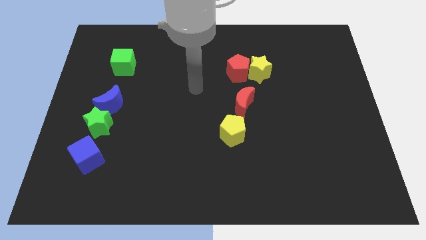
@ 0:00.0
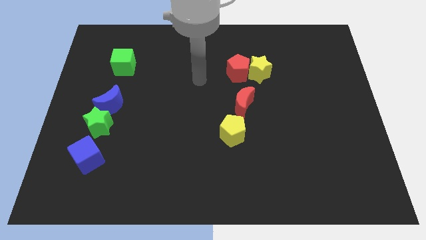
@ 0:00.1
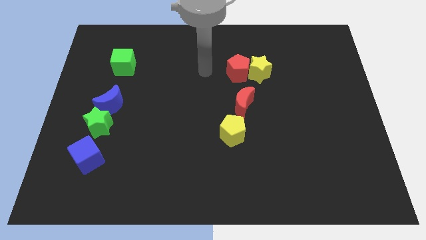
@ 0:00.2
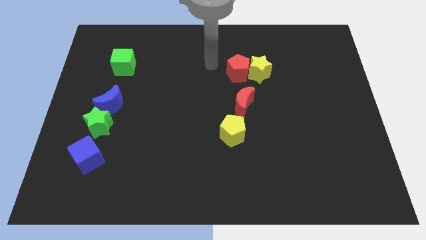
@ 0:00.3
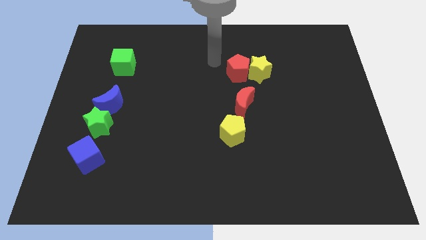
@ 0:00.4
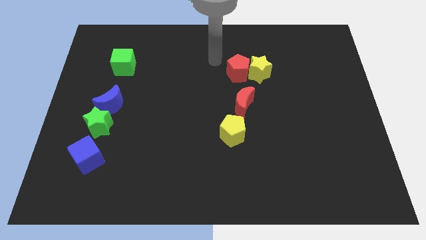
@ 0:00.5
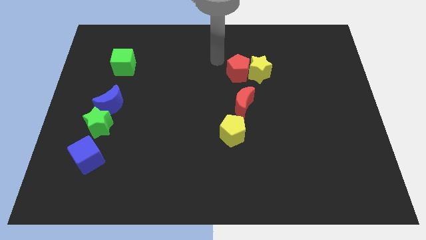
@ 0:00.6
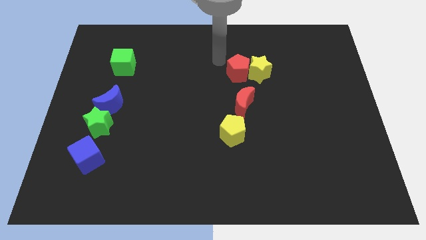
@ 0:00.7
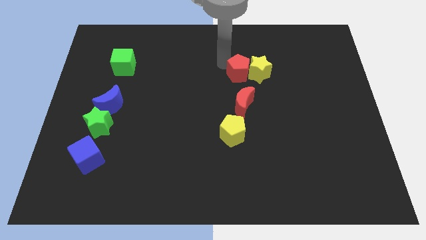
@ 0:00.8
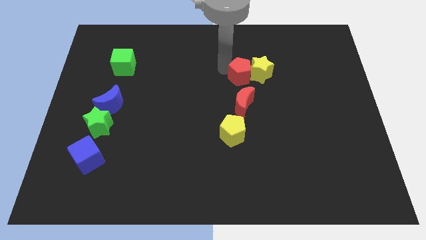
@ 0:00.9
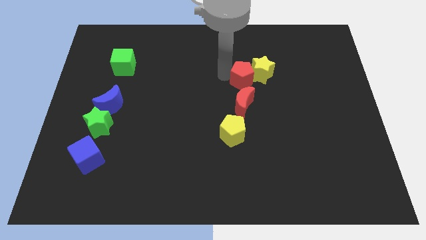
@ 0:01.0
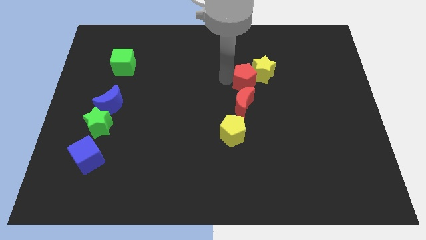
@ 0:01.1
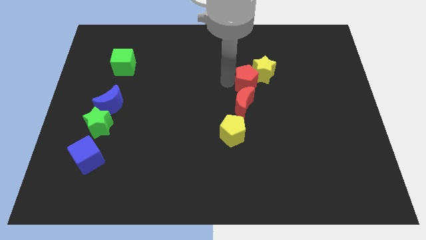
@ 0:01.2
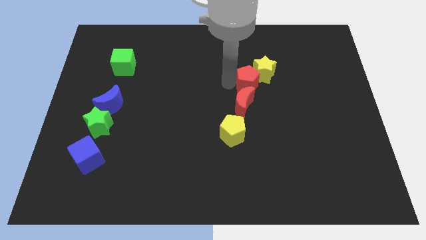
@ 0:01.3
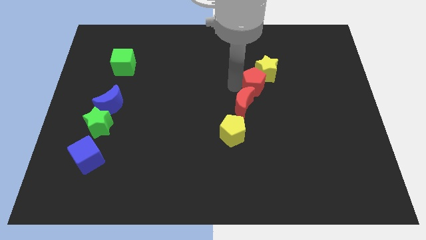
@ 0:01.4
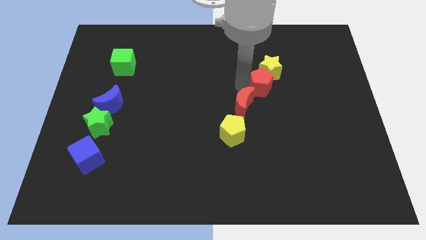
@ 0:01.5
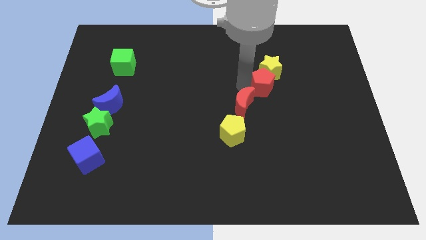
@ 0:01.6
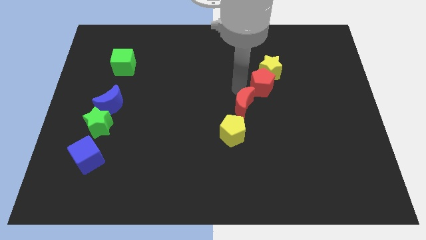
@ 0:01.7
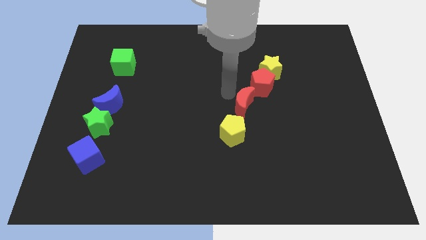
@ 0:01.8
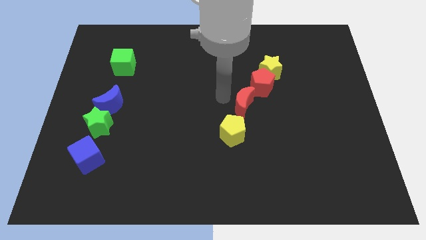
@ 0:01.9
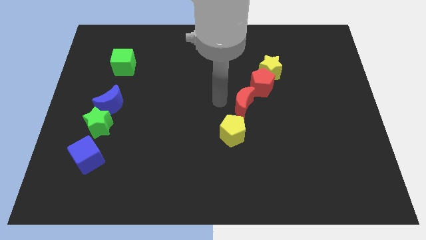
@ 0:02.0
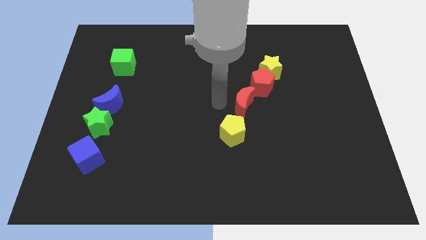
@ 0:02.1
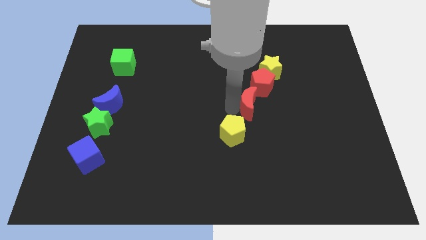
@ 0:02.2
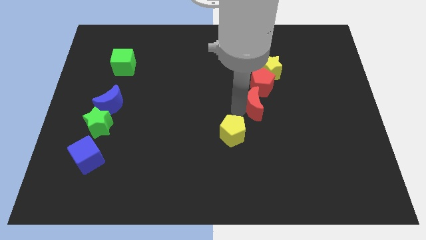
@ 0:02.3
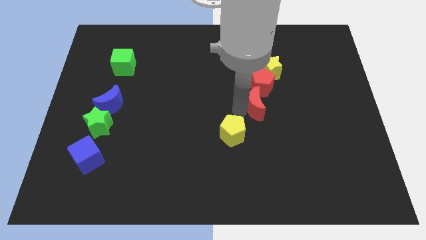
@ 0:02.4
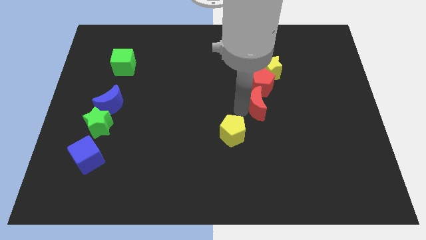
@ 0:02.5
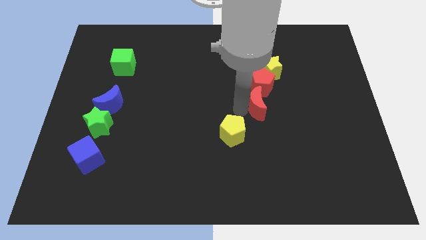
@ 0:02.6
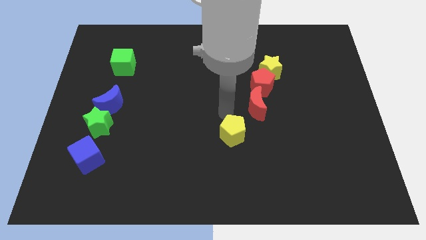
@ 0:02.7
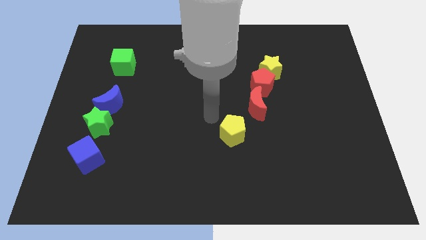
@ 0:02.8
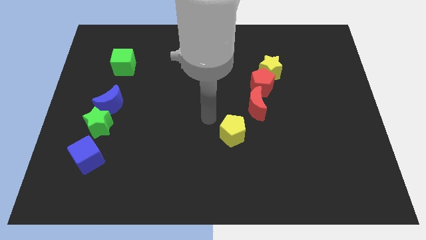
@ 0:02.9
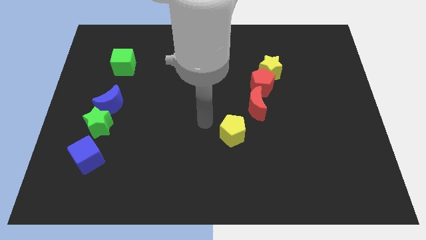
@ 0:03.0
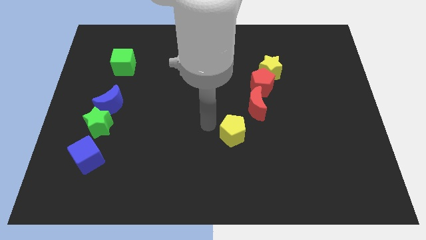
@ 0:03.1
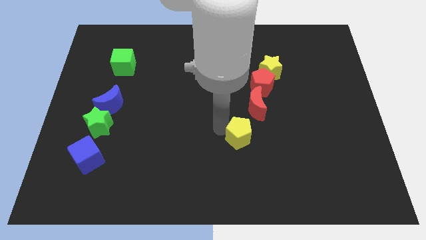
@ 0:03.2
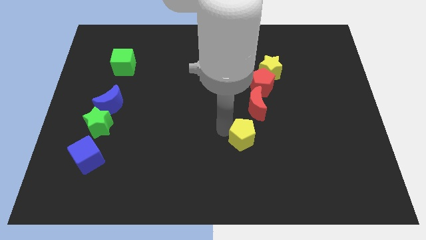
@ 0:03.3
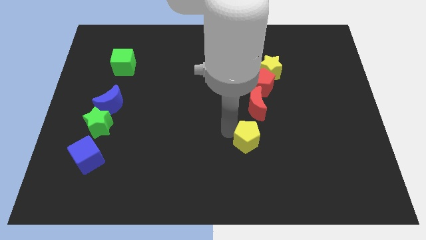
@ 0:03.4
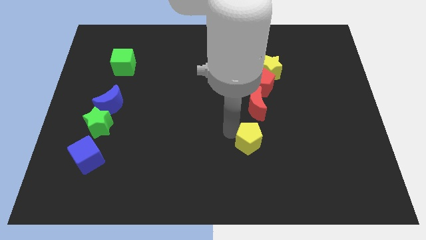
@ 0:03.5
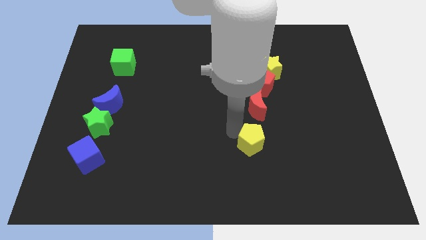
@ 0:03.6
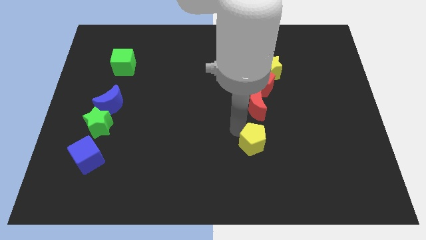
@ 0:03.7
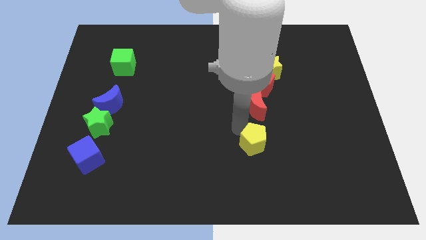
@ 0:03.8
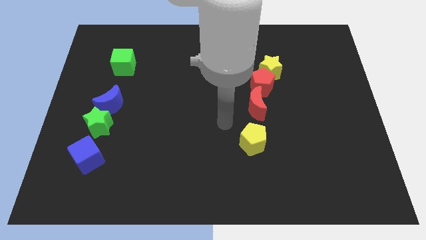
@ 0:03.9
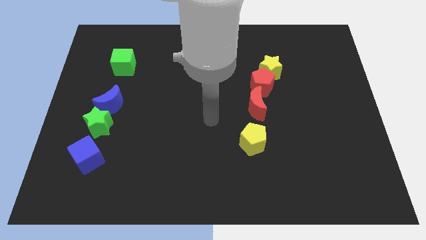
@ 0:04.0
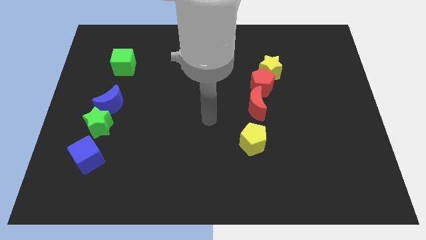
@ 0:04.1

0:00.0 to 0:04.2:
place two red blocks and two yellow blocks in a line

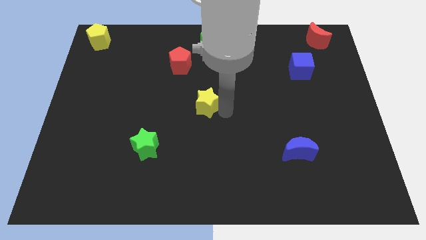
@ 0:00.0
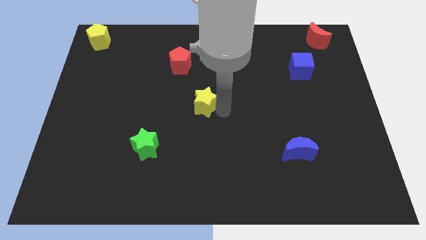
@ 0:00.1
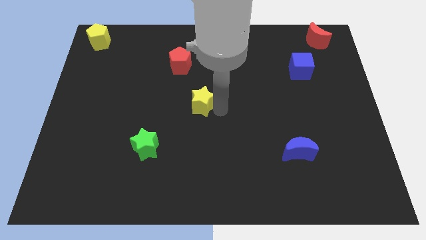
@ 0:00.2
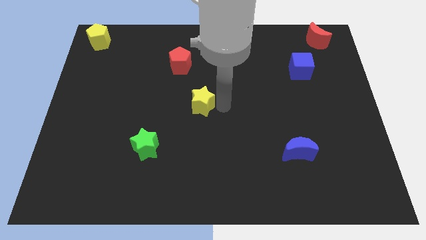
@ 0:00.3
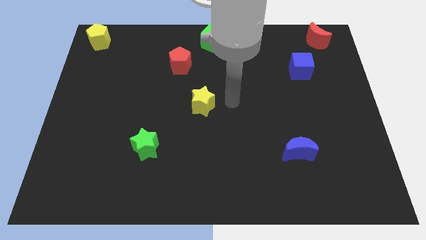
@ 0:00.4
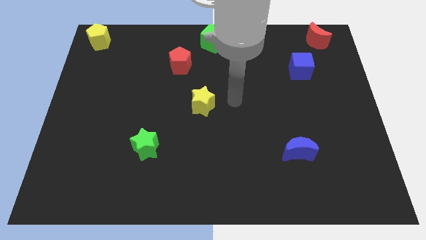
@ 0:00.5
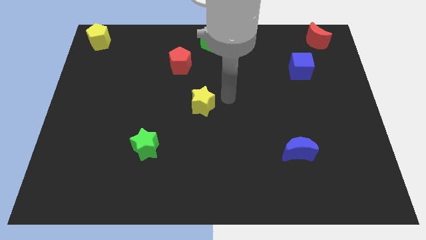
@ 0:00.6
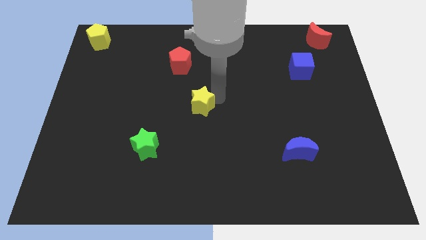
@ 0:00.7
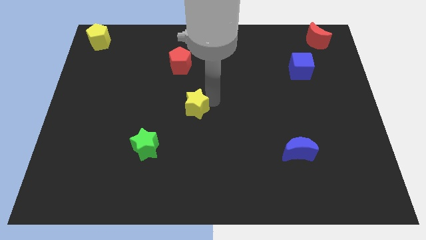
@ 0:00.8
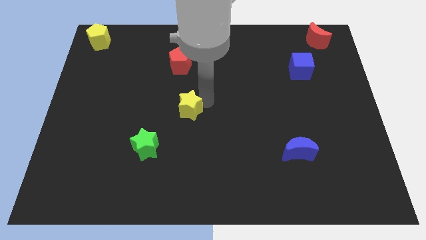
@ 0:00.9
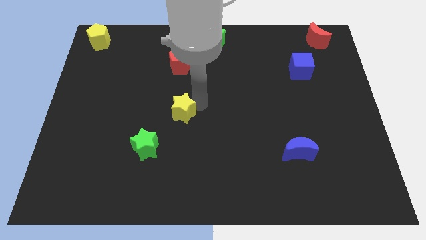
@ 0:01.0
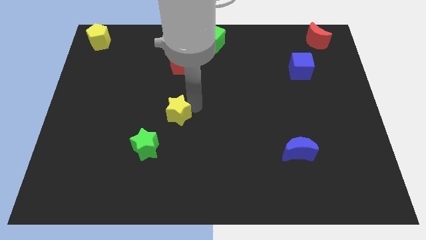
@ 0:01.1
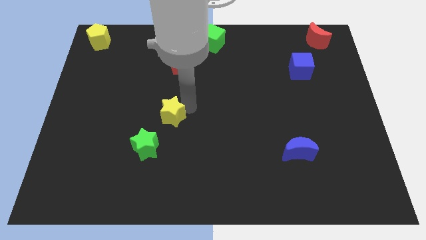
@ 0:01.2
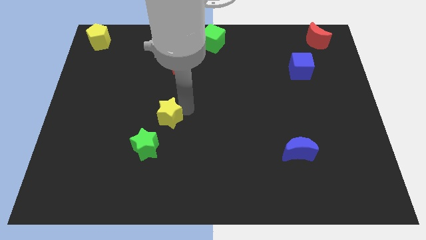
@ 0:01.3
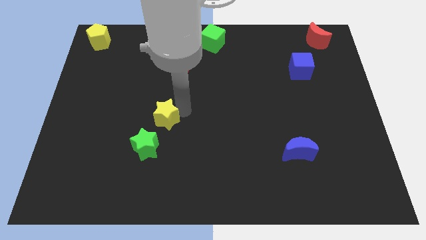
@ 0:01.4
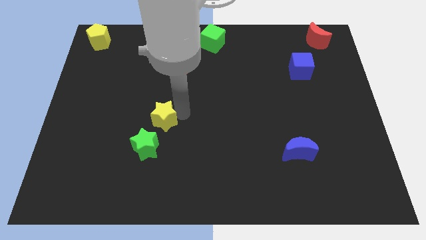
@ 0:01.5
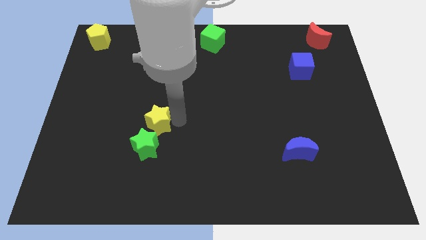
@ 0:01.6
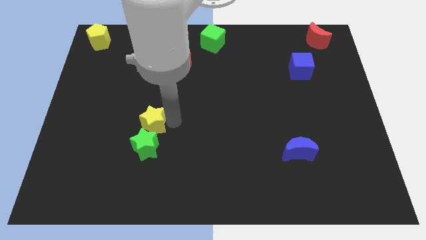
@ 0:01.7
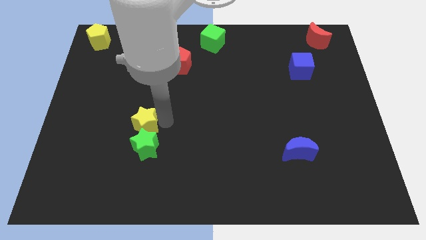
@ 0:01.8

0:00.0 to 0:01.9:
place the yellow star above the green star

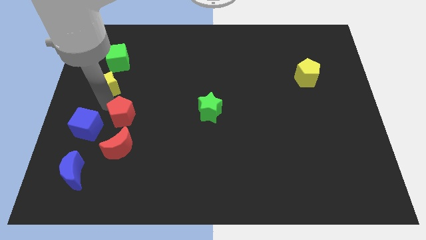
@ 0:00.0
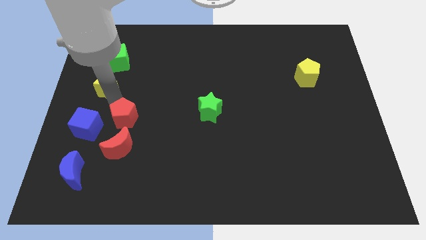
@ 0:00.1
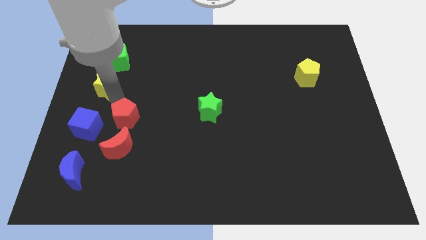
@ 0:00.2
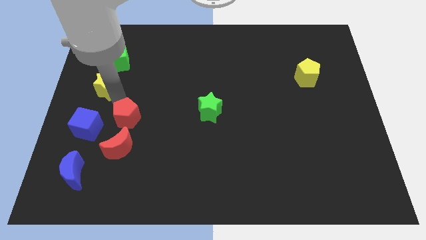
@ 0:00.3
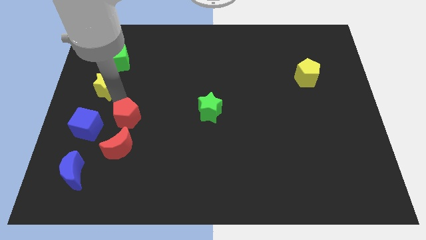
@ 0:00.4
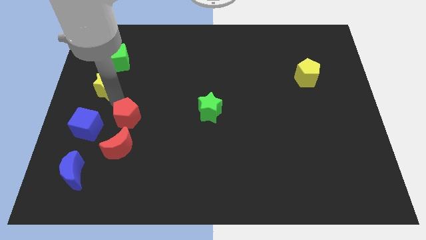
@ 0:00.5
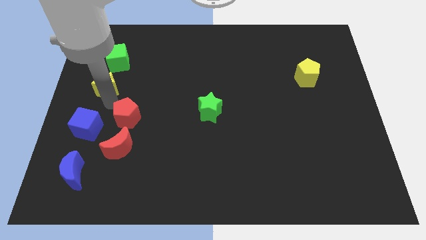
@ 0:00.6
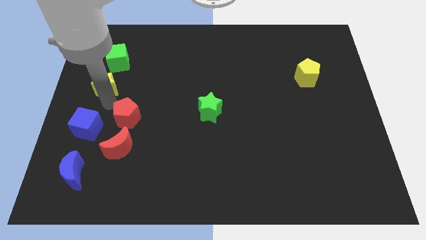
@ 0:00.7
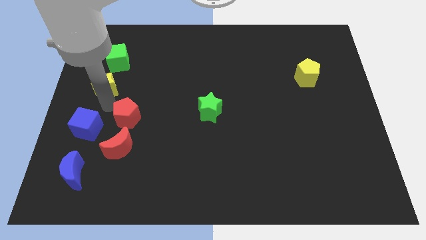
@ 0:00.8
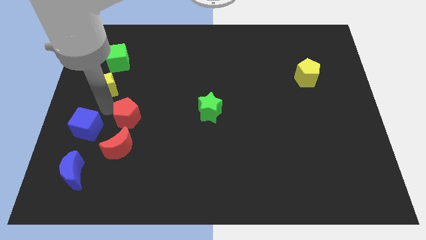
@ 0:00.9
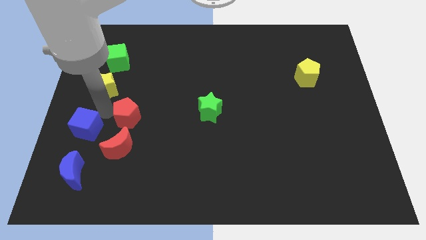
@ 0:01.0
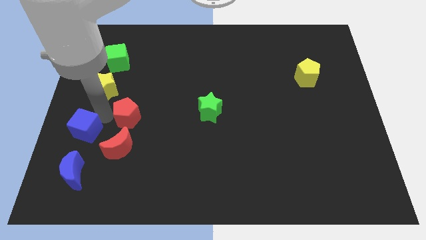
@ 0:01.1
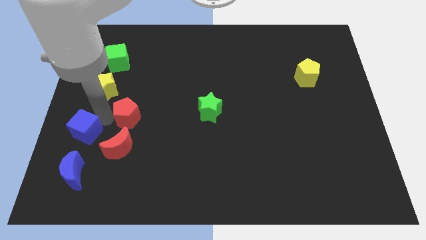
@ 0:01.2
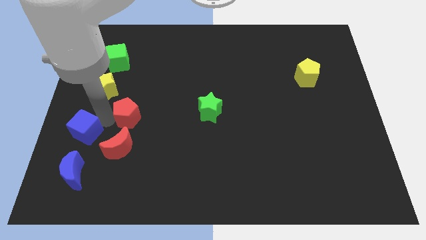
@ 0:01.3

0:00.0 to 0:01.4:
push the red pentagon slightly to the top of the red crescent

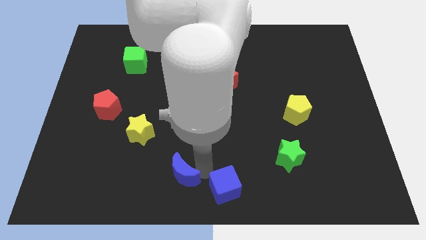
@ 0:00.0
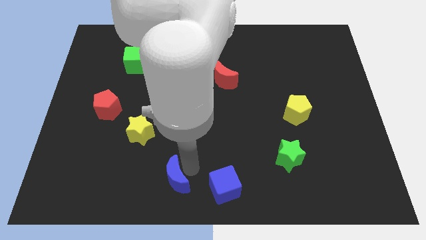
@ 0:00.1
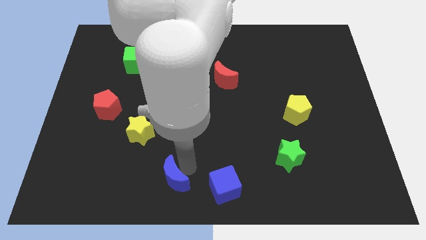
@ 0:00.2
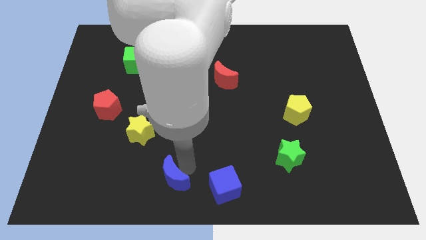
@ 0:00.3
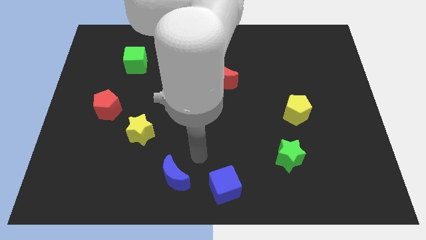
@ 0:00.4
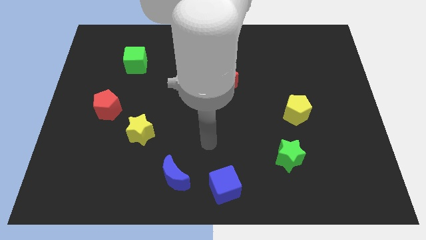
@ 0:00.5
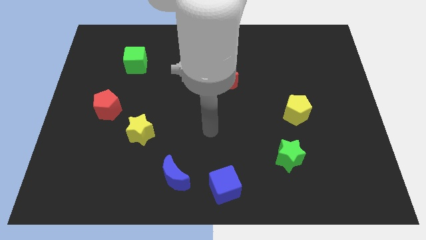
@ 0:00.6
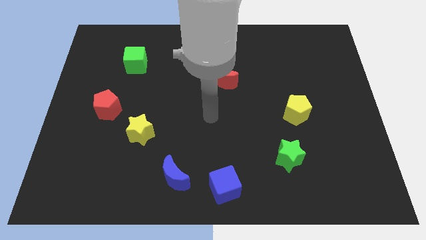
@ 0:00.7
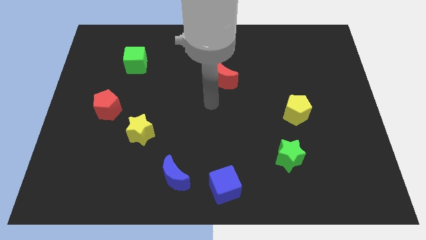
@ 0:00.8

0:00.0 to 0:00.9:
push the blue crescent away from the blue moon

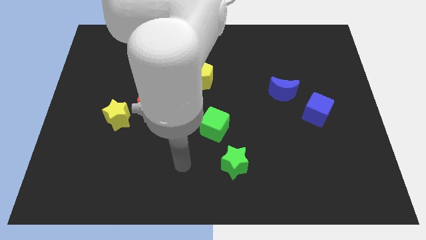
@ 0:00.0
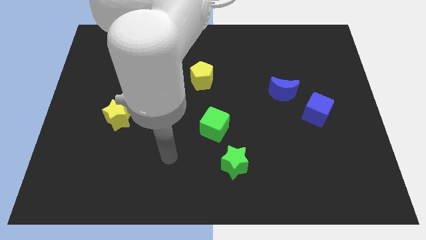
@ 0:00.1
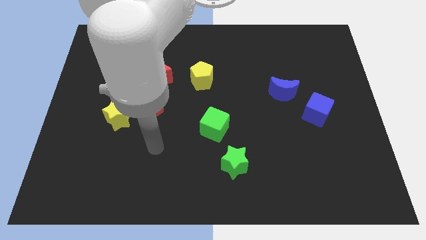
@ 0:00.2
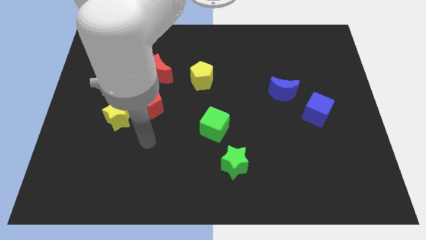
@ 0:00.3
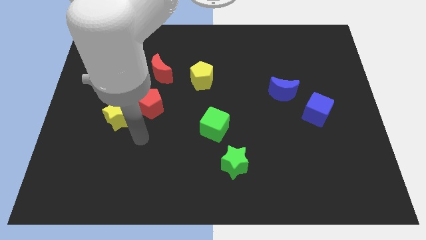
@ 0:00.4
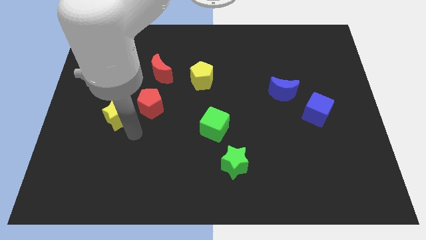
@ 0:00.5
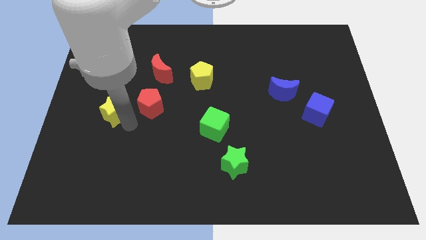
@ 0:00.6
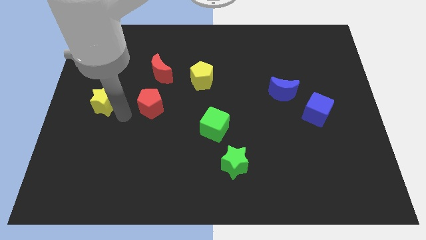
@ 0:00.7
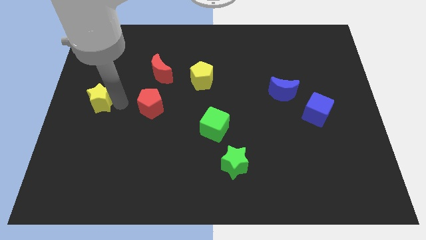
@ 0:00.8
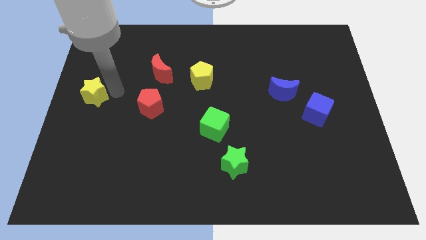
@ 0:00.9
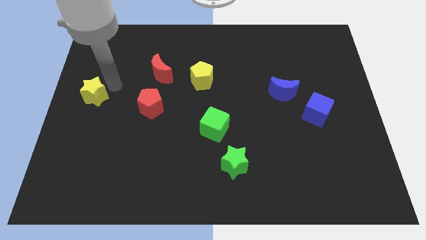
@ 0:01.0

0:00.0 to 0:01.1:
push the yellow star to the left side of the board
